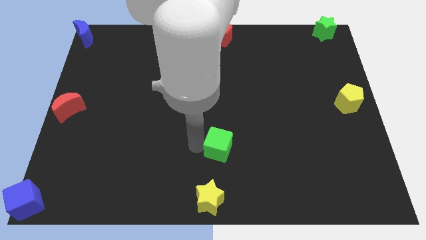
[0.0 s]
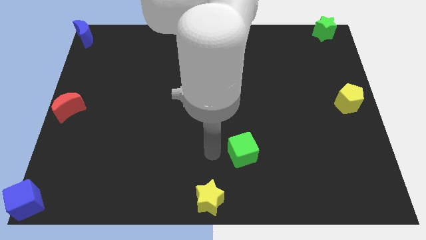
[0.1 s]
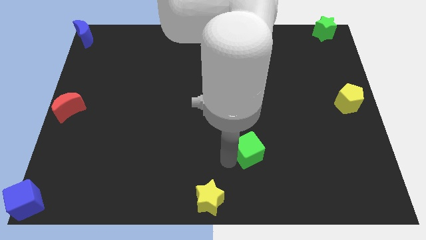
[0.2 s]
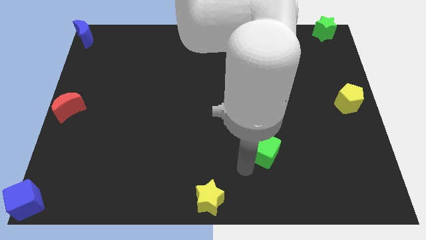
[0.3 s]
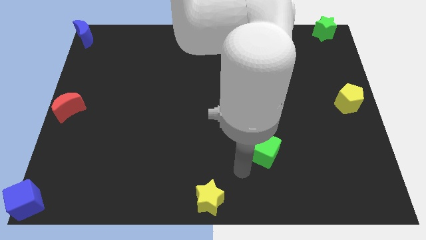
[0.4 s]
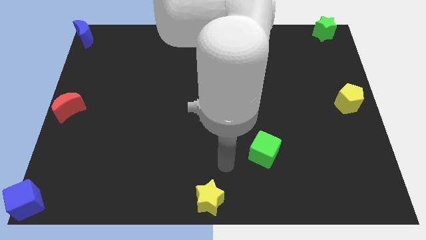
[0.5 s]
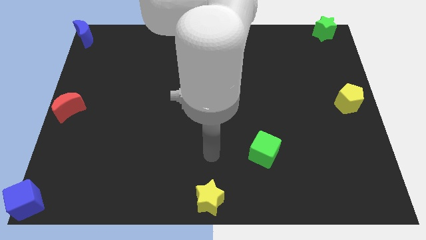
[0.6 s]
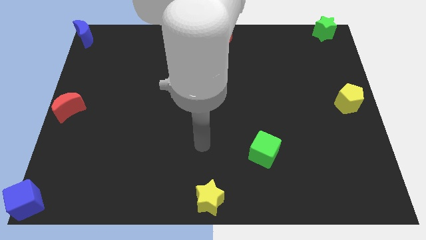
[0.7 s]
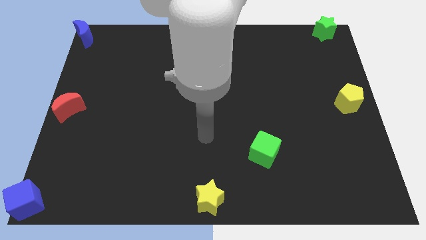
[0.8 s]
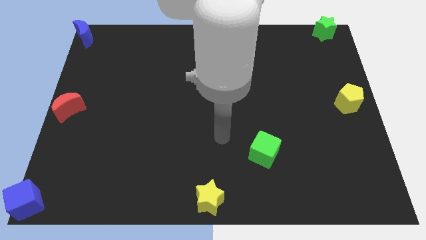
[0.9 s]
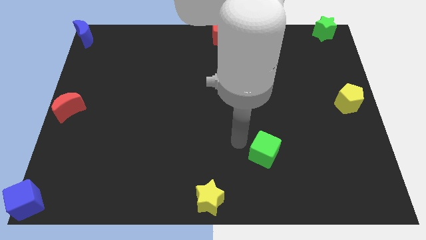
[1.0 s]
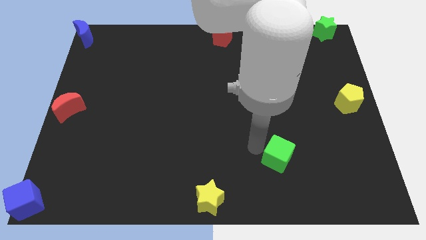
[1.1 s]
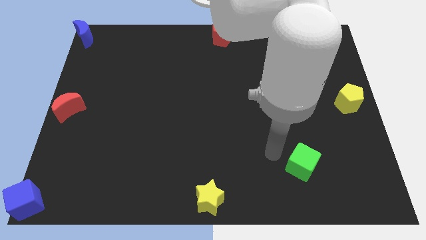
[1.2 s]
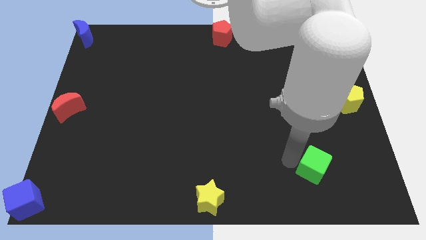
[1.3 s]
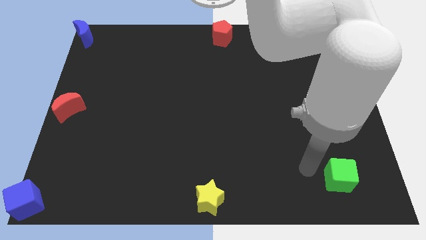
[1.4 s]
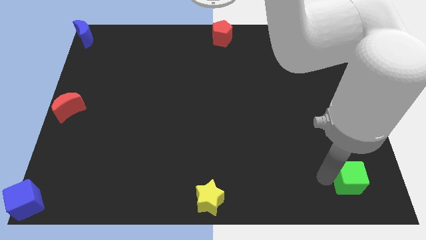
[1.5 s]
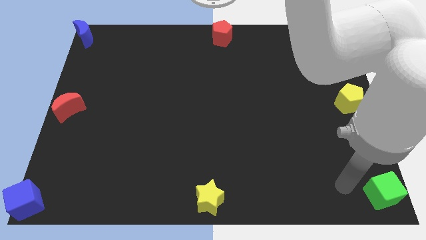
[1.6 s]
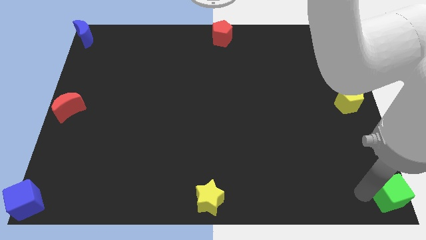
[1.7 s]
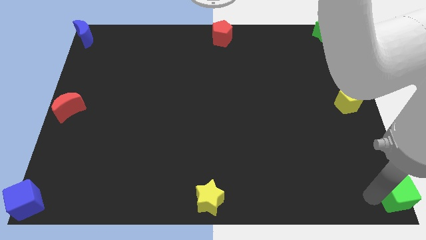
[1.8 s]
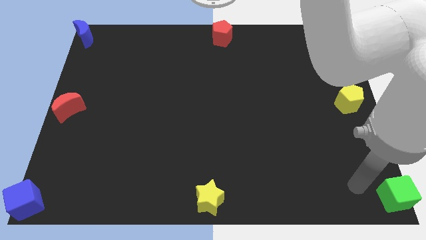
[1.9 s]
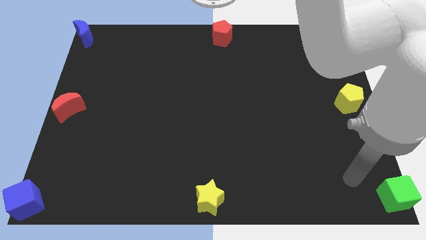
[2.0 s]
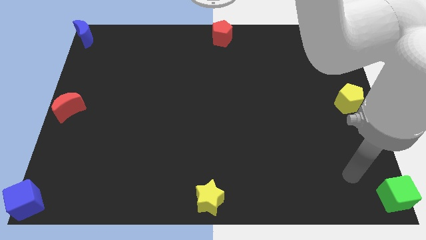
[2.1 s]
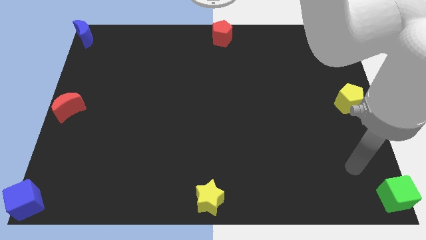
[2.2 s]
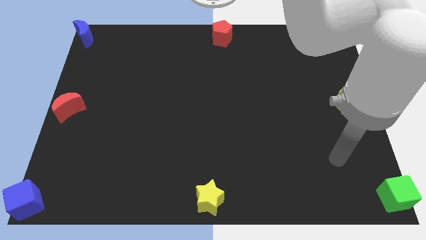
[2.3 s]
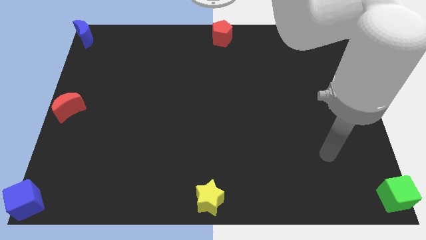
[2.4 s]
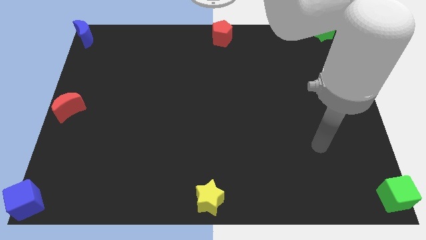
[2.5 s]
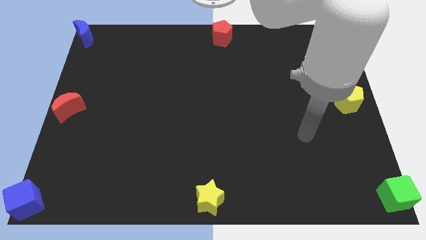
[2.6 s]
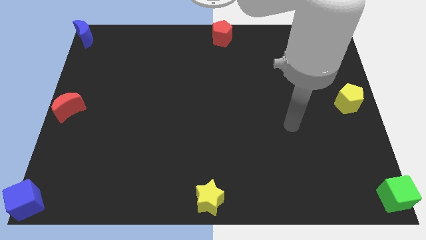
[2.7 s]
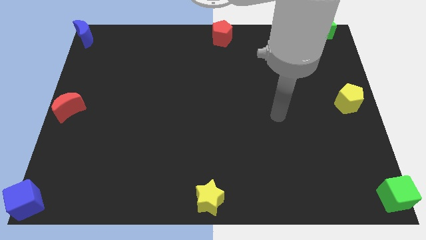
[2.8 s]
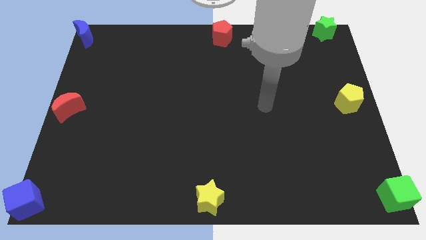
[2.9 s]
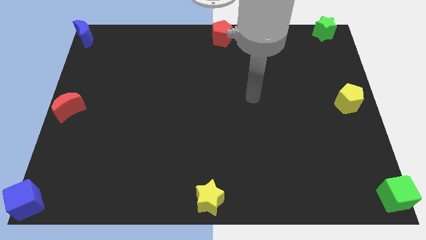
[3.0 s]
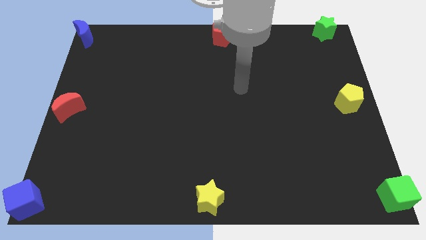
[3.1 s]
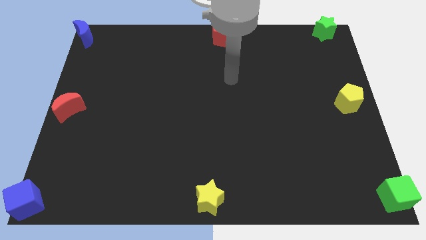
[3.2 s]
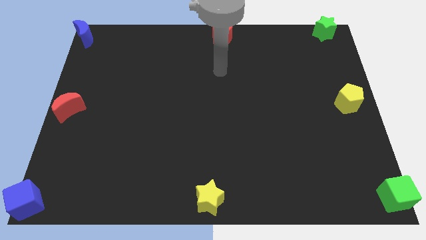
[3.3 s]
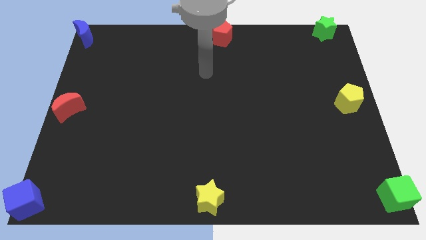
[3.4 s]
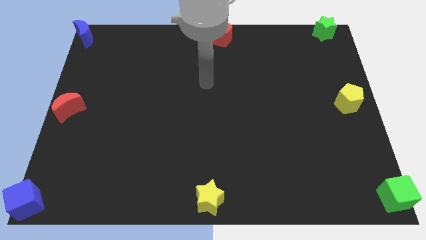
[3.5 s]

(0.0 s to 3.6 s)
move green cube to the bottom right of the board

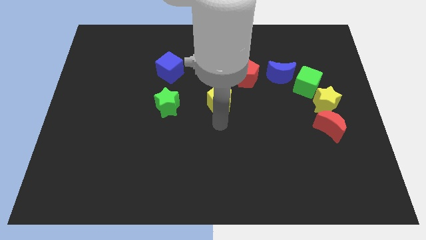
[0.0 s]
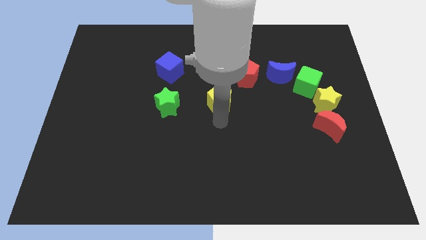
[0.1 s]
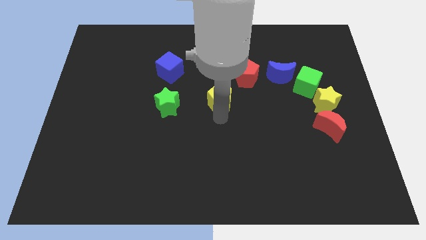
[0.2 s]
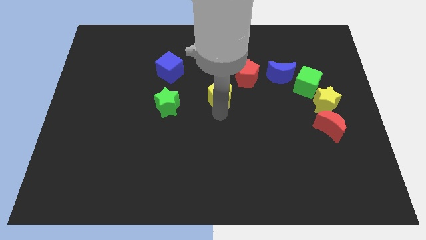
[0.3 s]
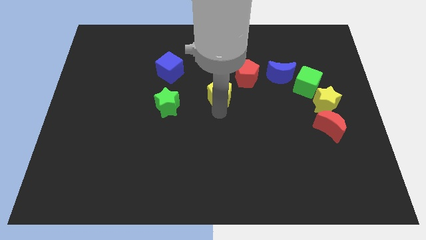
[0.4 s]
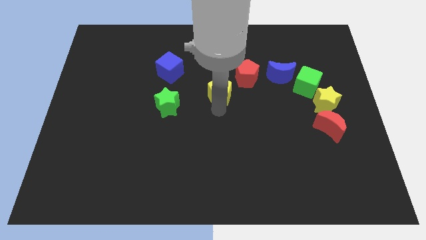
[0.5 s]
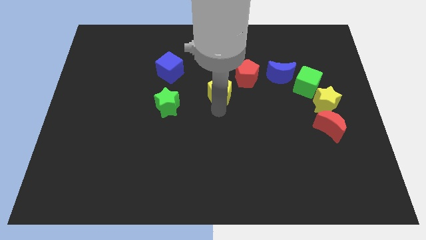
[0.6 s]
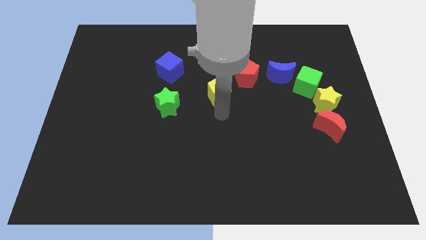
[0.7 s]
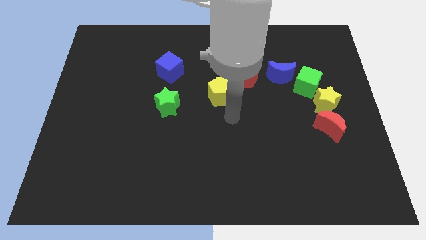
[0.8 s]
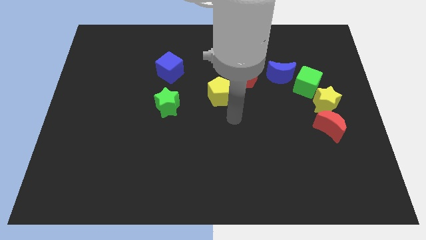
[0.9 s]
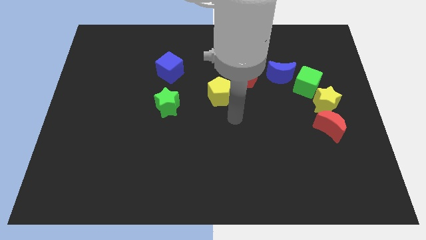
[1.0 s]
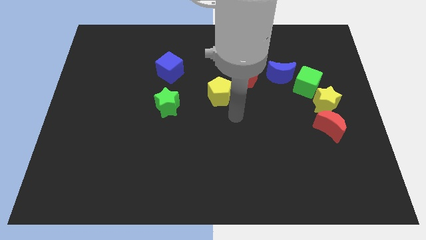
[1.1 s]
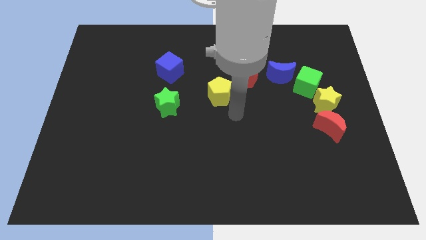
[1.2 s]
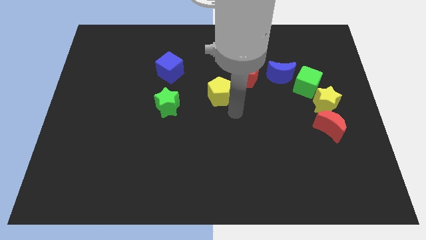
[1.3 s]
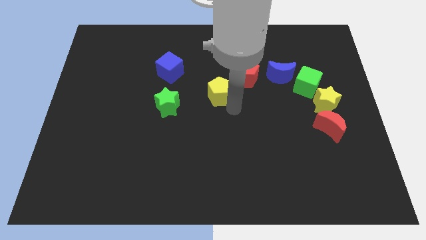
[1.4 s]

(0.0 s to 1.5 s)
push the yellow pentagon to the top of the board

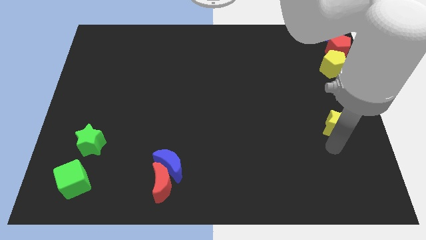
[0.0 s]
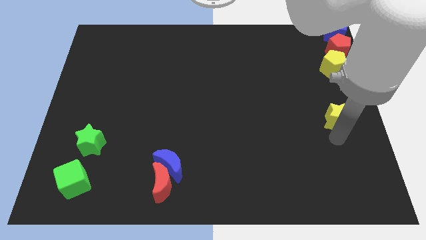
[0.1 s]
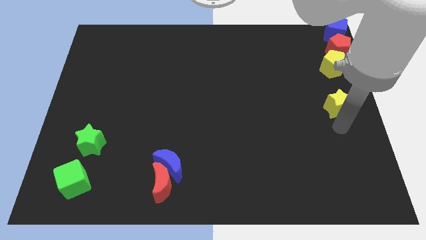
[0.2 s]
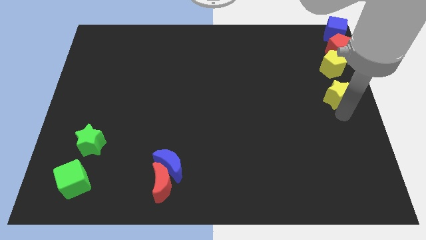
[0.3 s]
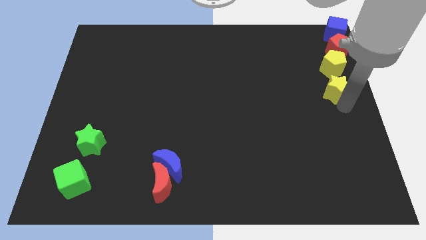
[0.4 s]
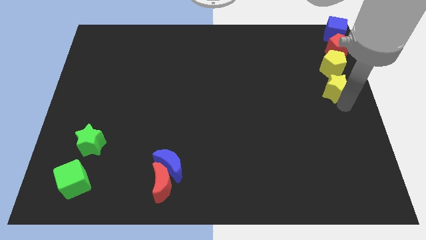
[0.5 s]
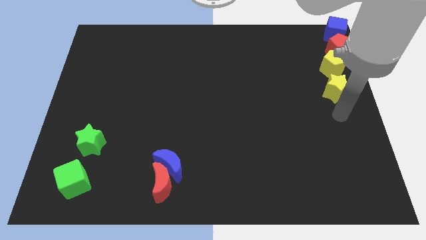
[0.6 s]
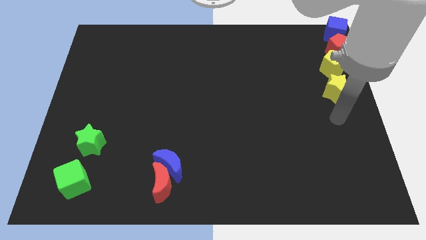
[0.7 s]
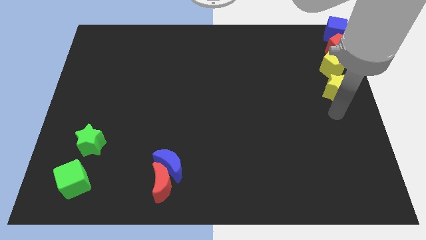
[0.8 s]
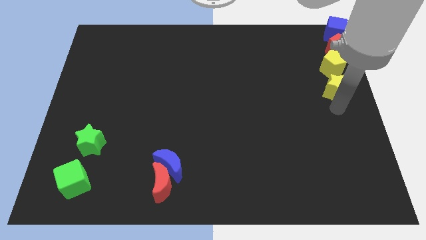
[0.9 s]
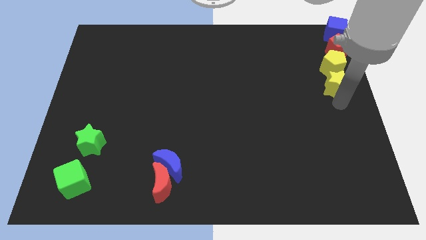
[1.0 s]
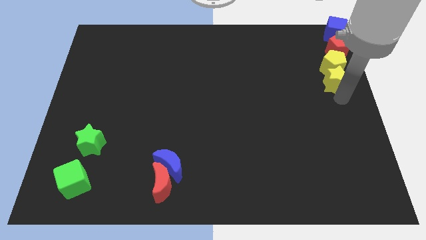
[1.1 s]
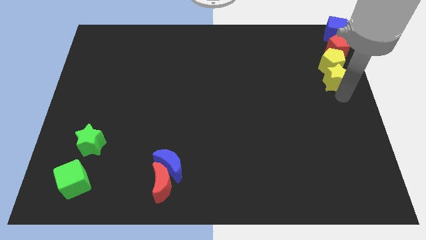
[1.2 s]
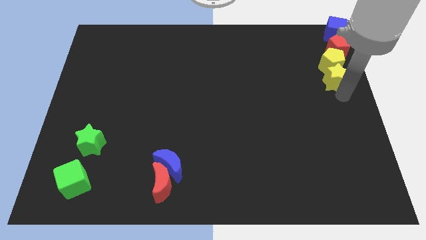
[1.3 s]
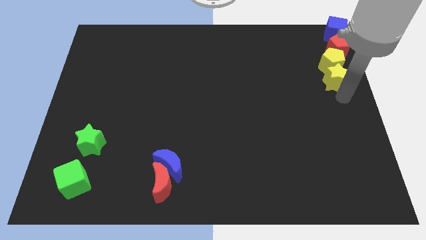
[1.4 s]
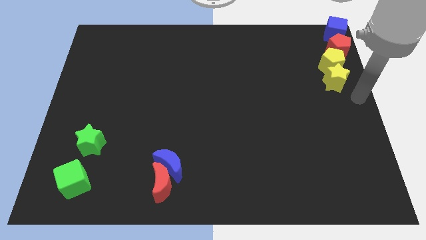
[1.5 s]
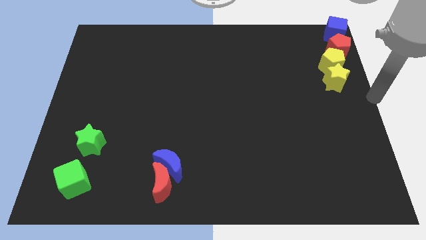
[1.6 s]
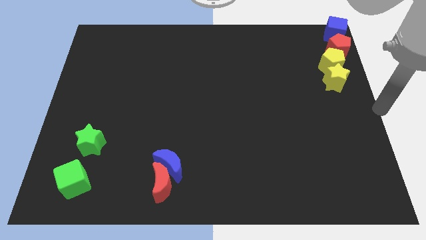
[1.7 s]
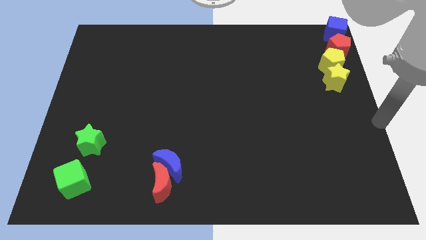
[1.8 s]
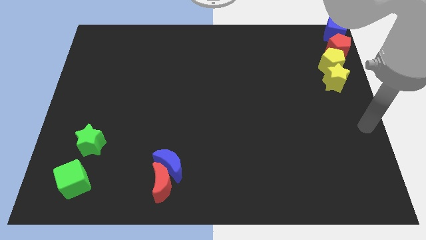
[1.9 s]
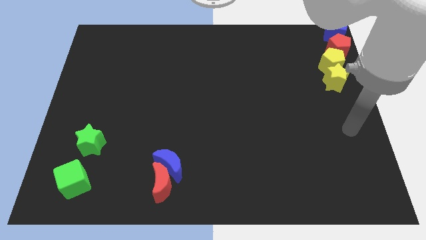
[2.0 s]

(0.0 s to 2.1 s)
push yellow star close to yellow pentagon

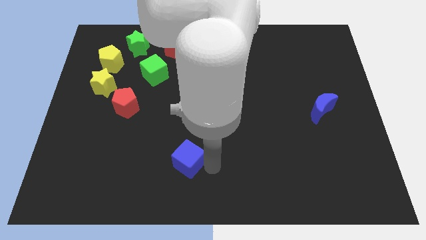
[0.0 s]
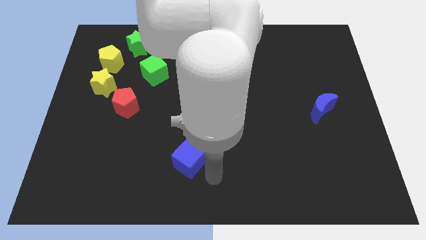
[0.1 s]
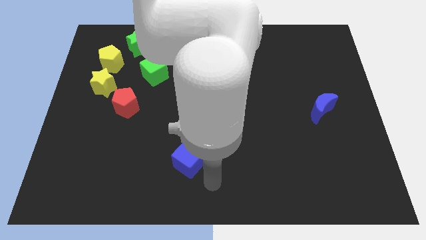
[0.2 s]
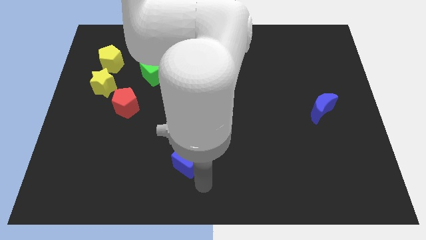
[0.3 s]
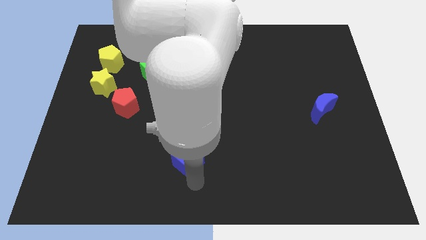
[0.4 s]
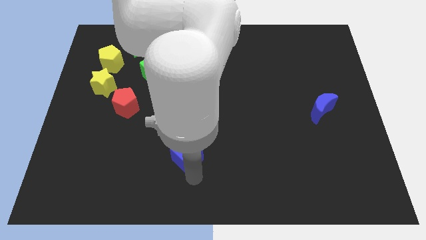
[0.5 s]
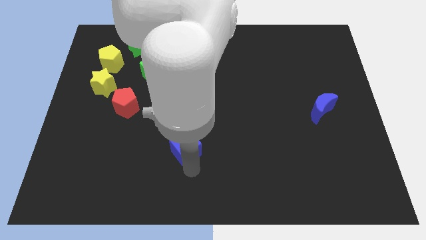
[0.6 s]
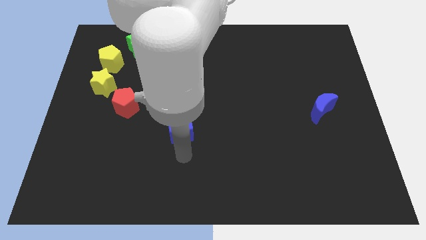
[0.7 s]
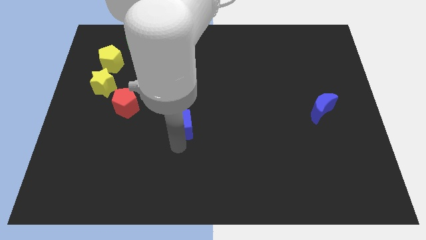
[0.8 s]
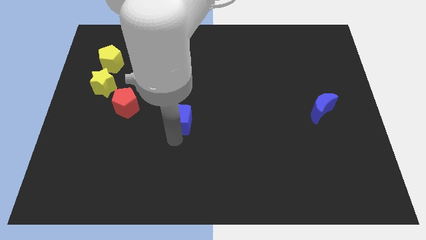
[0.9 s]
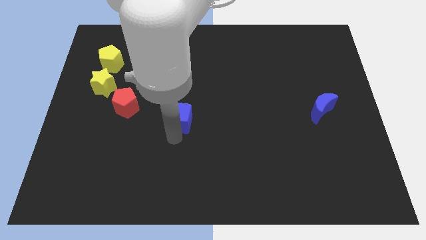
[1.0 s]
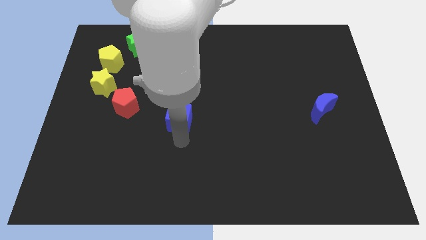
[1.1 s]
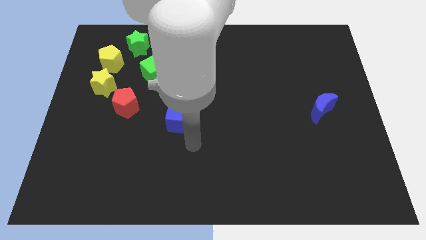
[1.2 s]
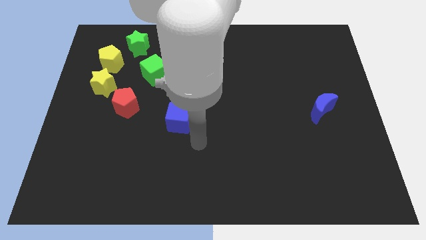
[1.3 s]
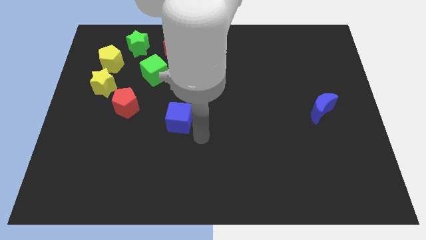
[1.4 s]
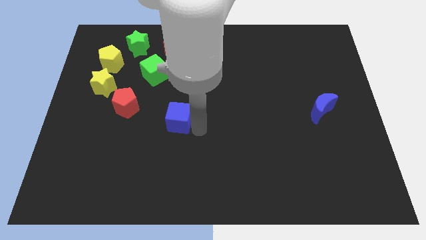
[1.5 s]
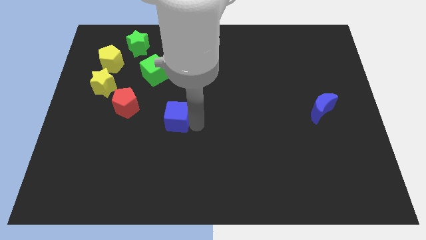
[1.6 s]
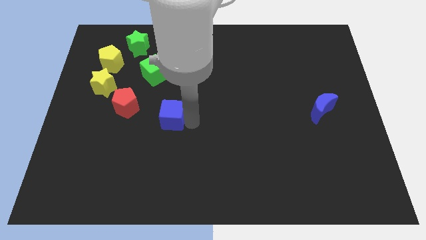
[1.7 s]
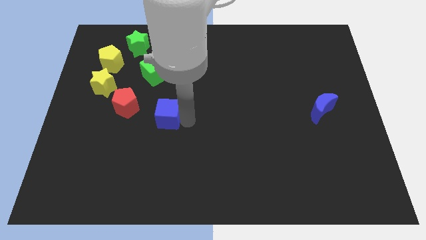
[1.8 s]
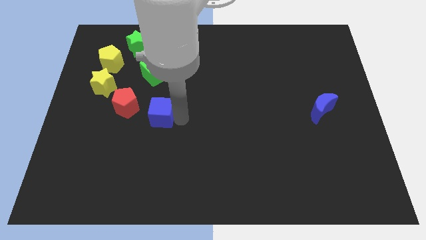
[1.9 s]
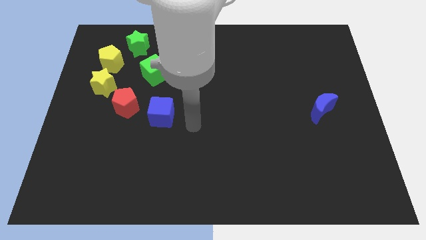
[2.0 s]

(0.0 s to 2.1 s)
place blue cube near to red polygon
